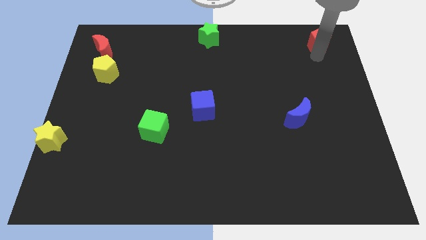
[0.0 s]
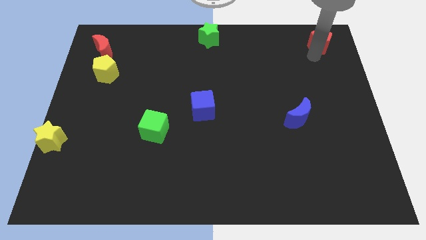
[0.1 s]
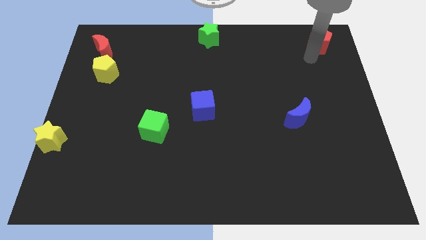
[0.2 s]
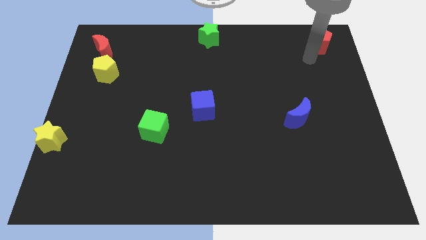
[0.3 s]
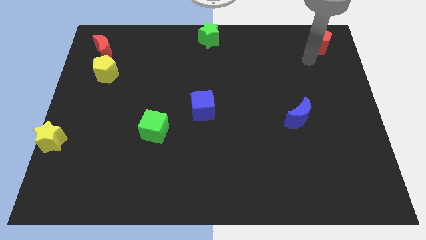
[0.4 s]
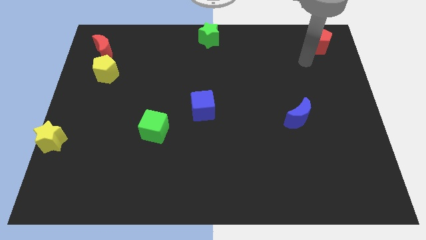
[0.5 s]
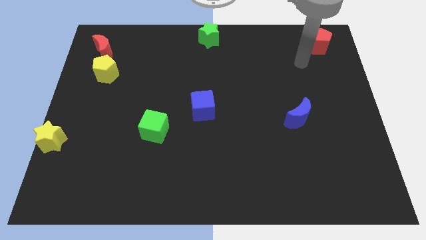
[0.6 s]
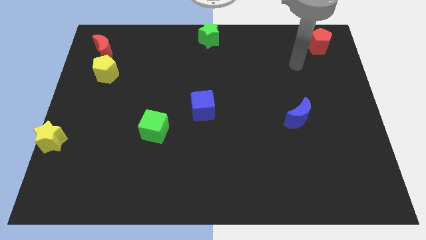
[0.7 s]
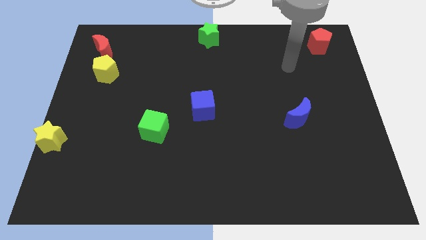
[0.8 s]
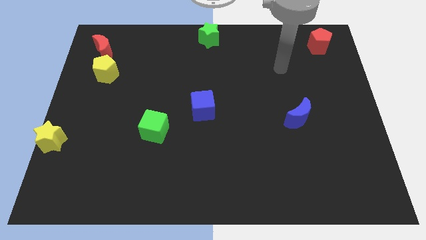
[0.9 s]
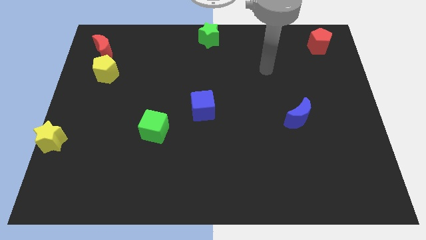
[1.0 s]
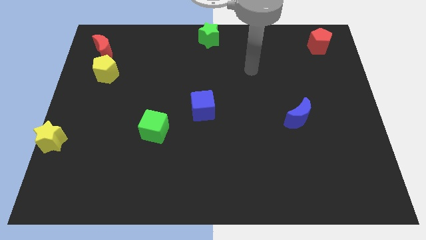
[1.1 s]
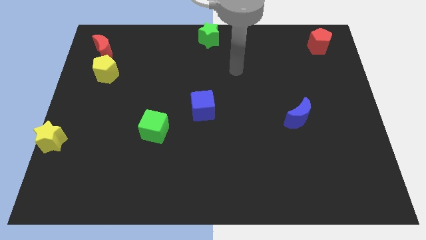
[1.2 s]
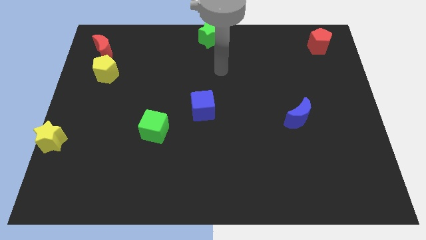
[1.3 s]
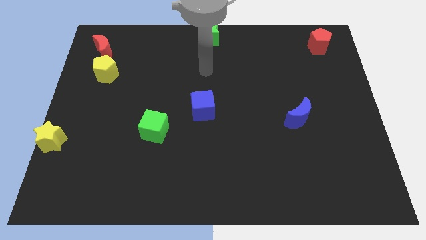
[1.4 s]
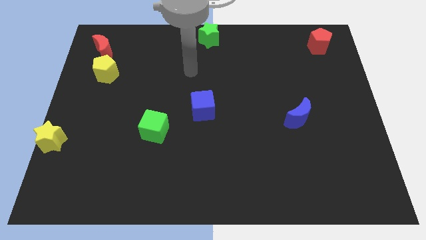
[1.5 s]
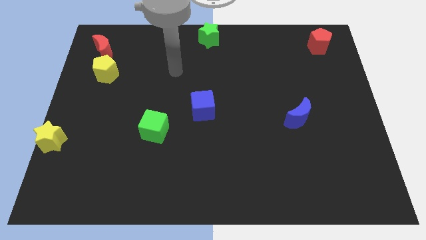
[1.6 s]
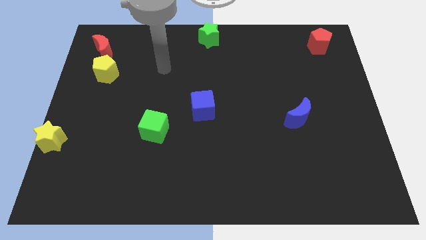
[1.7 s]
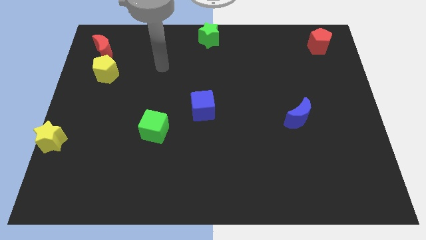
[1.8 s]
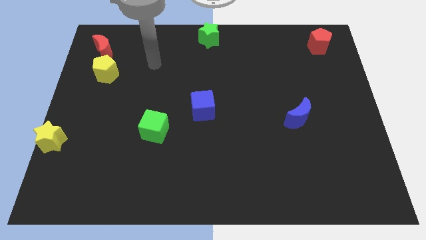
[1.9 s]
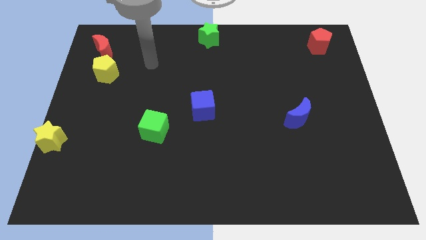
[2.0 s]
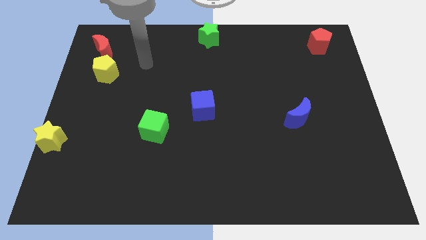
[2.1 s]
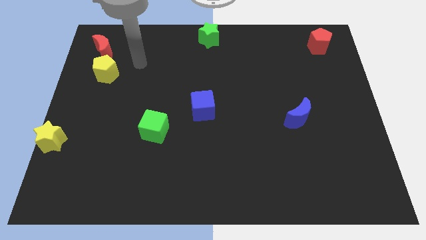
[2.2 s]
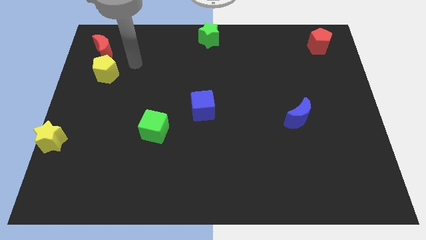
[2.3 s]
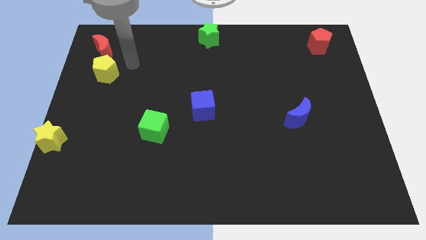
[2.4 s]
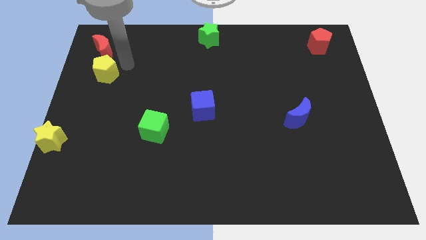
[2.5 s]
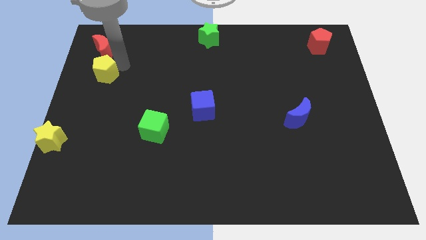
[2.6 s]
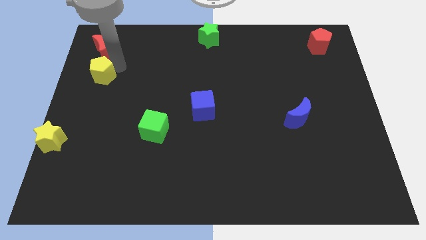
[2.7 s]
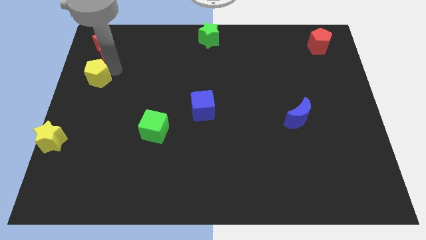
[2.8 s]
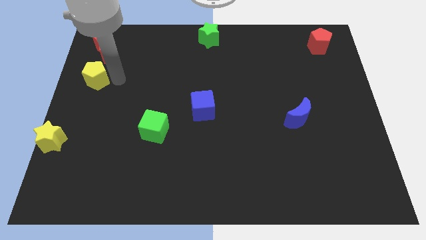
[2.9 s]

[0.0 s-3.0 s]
slightly move the yellow pentagon towards the left side of the board

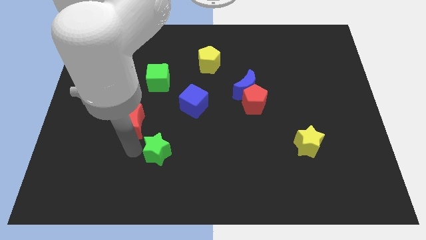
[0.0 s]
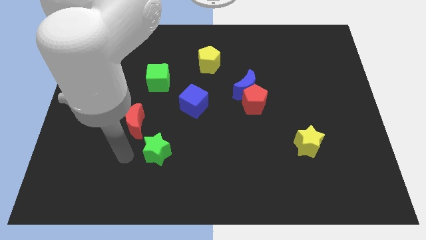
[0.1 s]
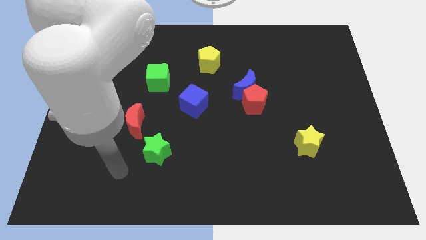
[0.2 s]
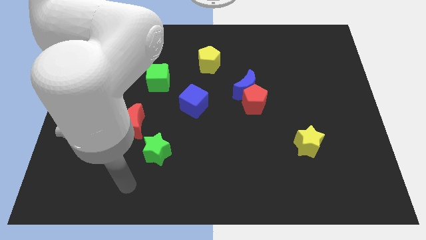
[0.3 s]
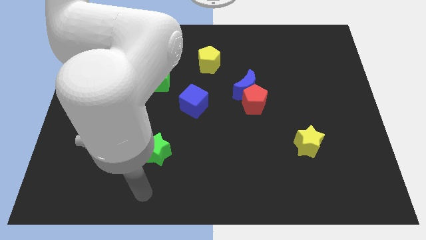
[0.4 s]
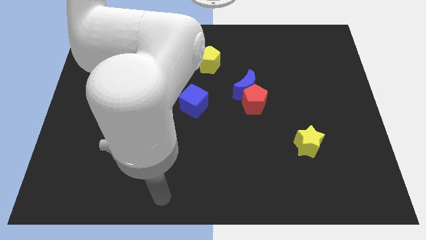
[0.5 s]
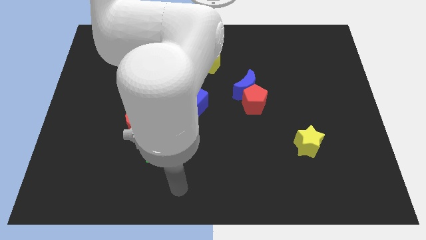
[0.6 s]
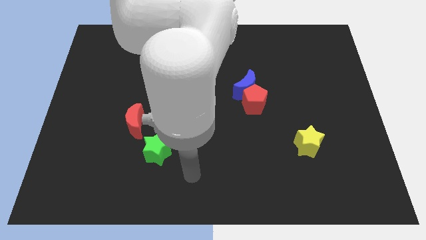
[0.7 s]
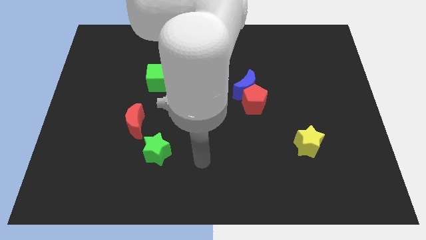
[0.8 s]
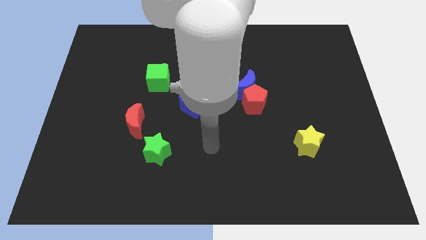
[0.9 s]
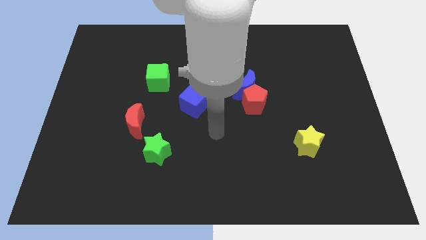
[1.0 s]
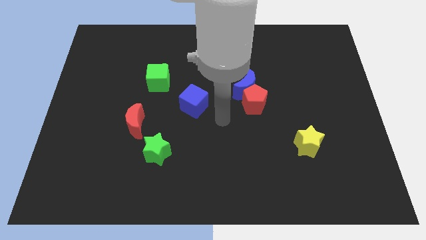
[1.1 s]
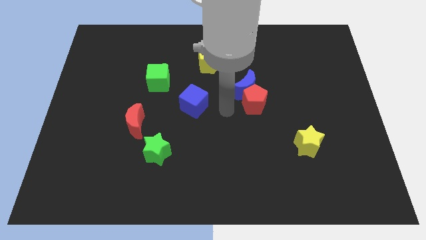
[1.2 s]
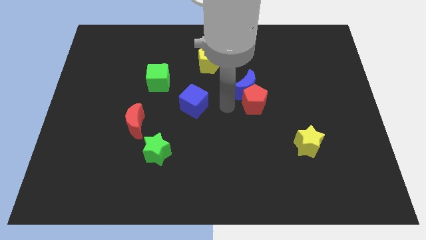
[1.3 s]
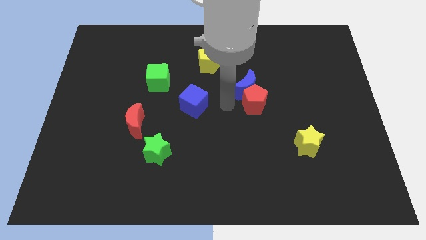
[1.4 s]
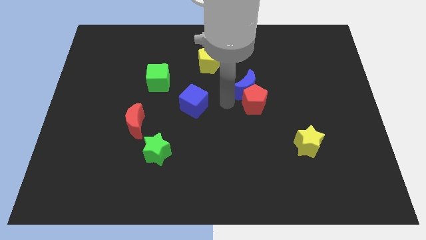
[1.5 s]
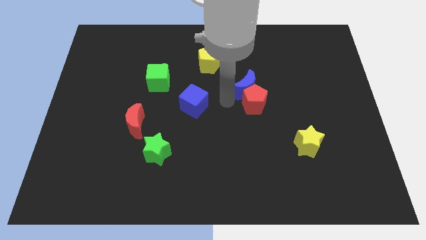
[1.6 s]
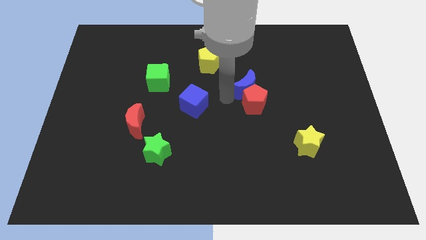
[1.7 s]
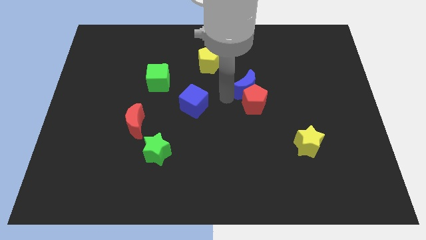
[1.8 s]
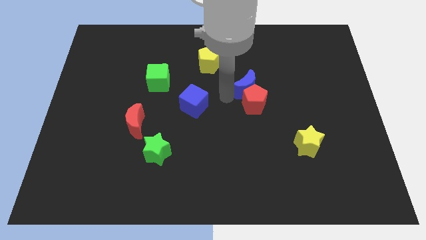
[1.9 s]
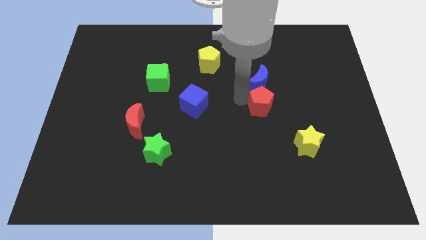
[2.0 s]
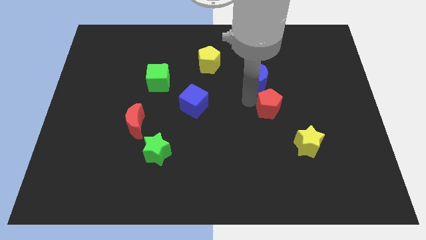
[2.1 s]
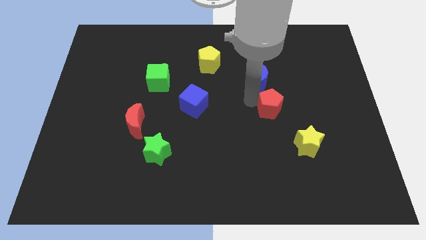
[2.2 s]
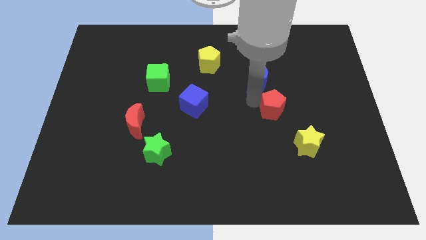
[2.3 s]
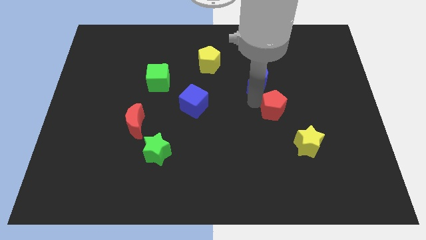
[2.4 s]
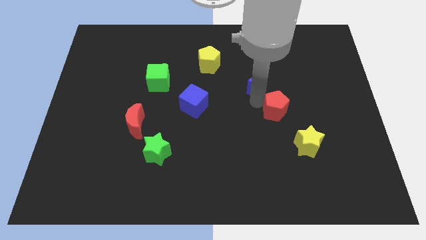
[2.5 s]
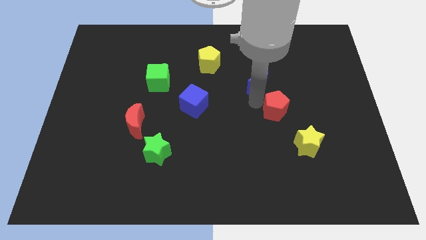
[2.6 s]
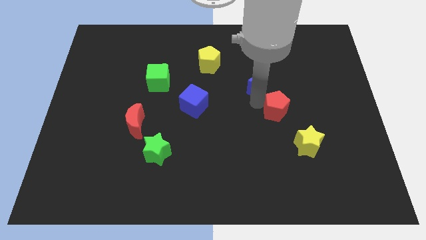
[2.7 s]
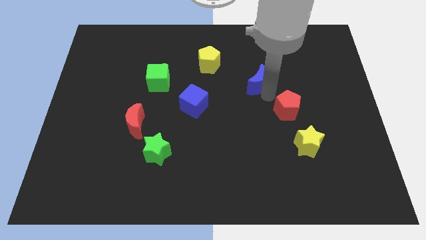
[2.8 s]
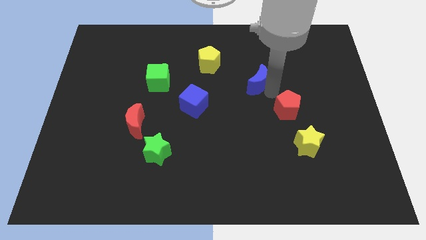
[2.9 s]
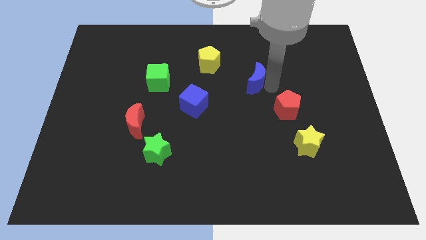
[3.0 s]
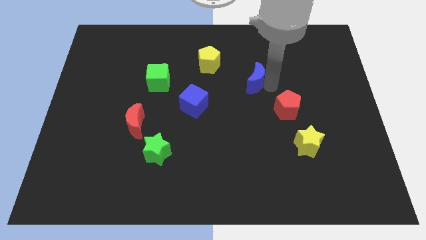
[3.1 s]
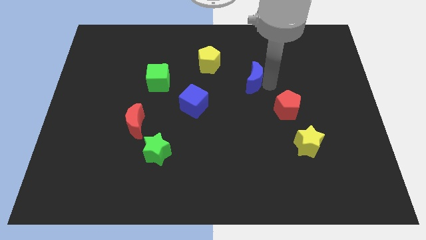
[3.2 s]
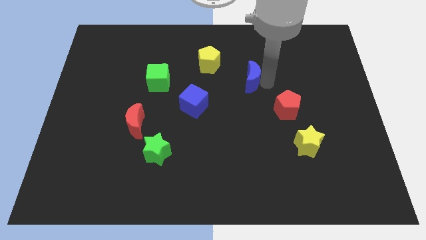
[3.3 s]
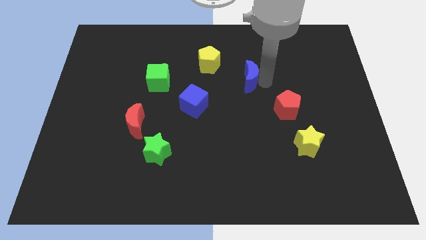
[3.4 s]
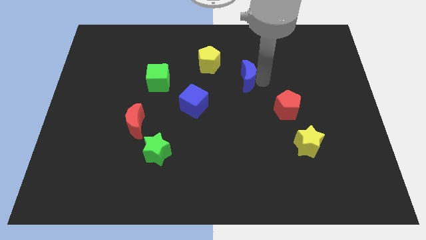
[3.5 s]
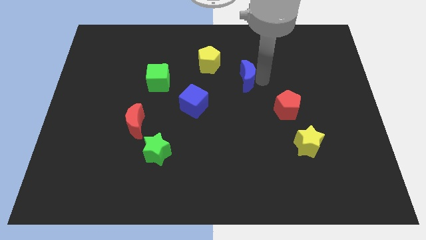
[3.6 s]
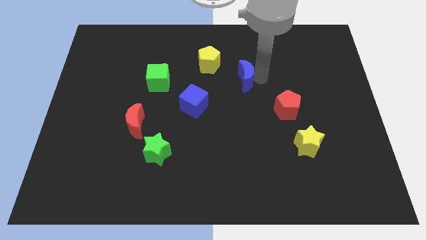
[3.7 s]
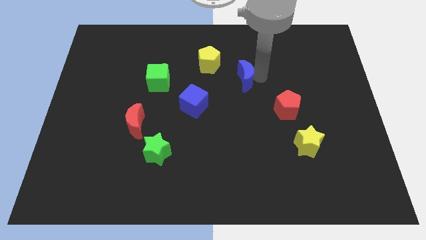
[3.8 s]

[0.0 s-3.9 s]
separate the red pentagon and the blue crescent

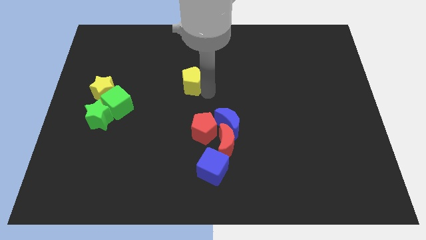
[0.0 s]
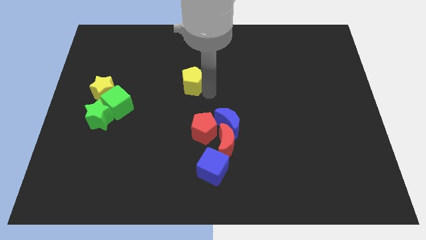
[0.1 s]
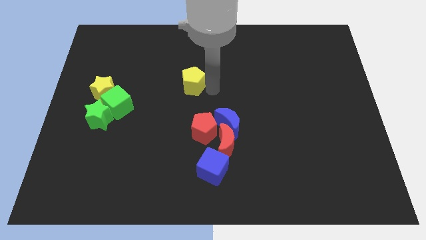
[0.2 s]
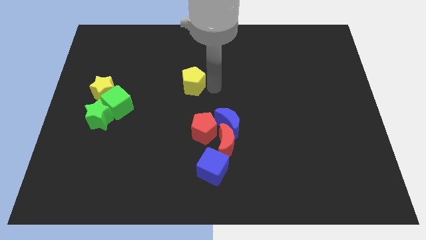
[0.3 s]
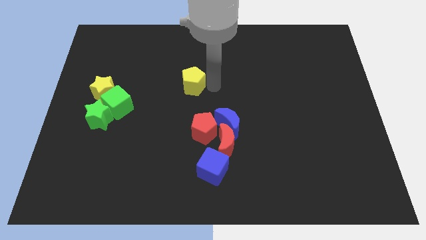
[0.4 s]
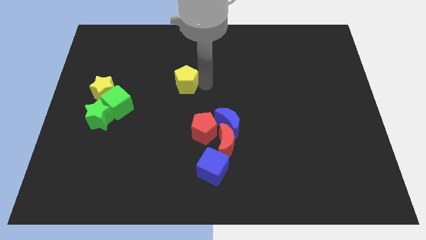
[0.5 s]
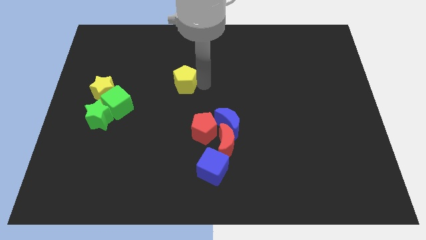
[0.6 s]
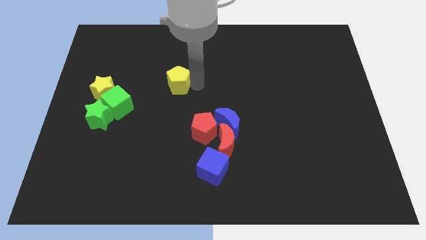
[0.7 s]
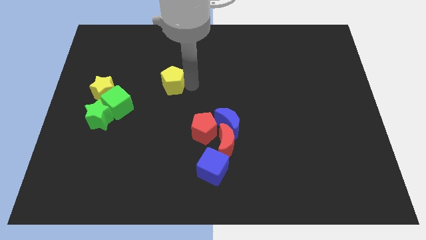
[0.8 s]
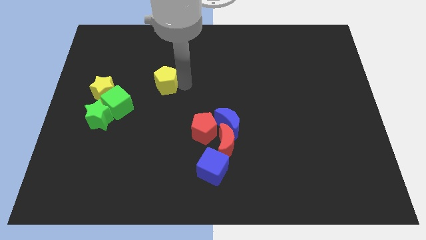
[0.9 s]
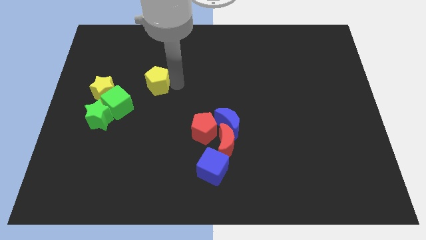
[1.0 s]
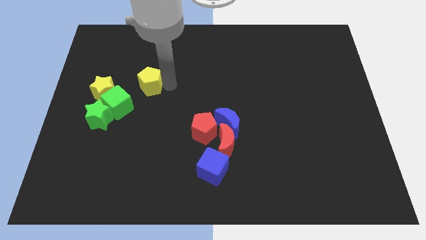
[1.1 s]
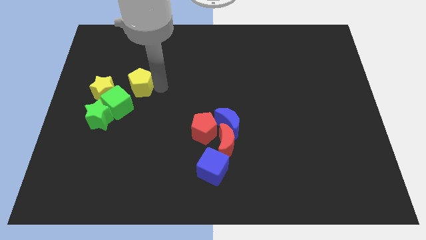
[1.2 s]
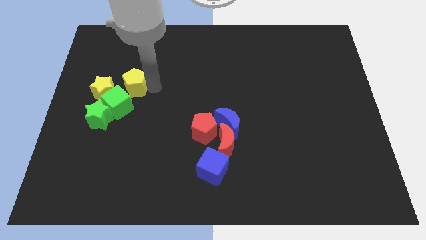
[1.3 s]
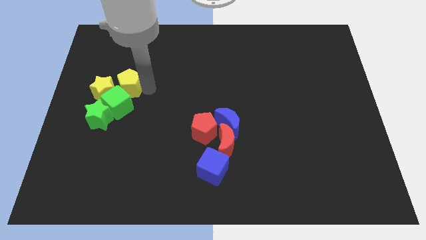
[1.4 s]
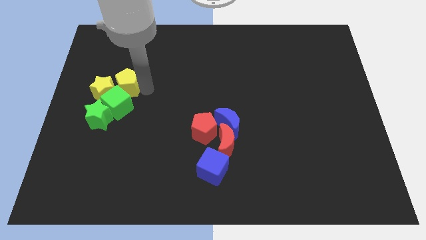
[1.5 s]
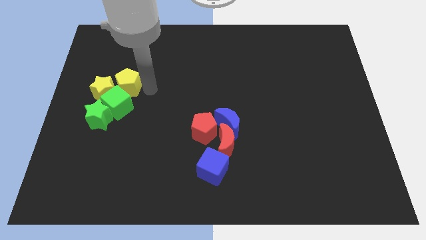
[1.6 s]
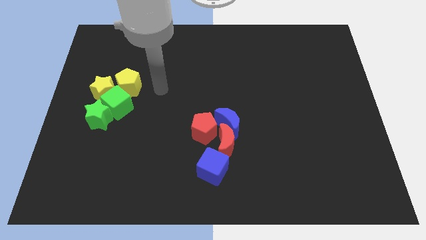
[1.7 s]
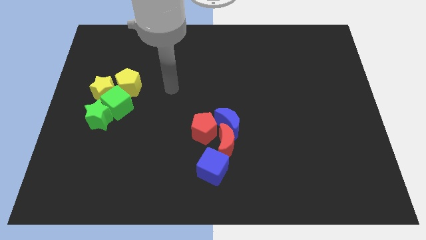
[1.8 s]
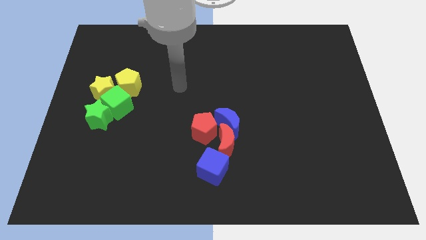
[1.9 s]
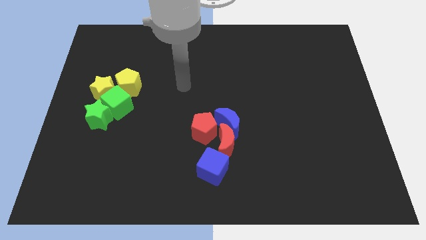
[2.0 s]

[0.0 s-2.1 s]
place the yellow pentagon diagonally to the yellow star

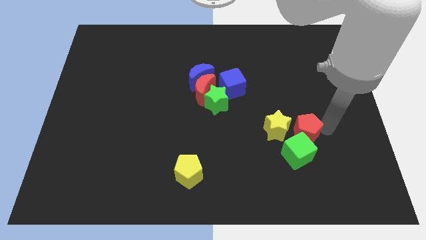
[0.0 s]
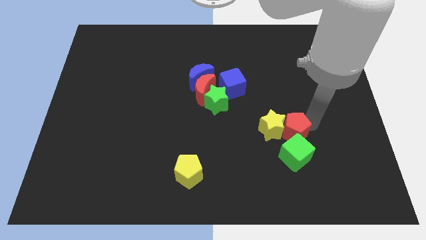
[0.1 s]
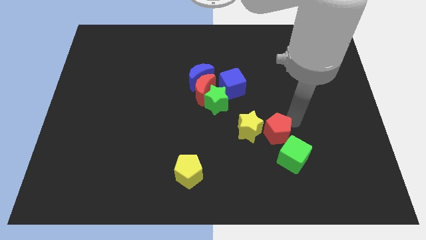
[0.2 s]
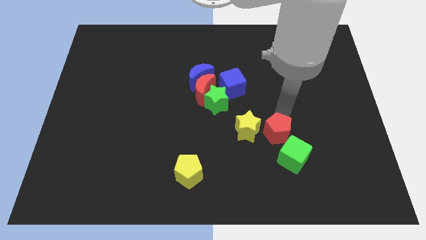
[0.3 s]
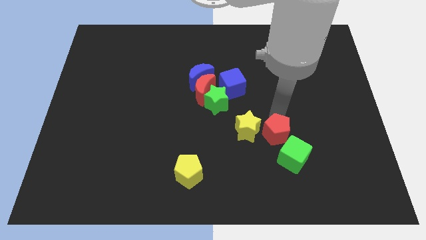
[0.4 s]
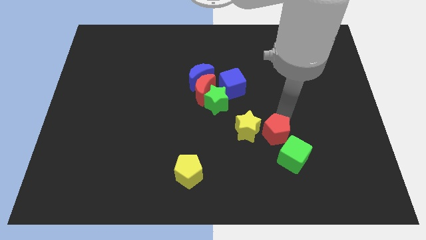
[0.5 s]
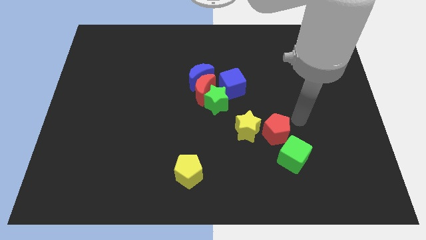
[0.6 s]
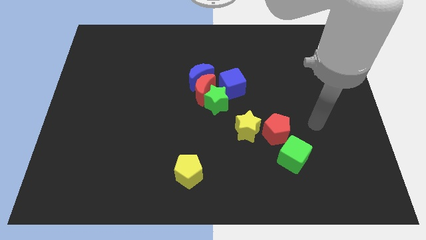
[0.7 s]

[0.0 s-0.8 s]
drag red pentagon and yellow star towards left side of the board
